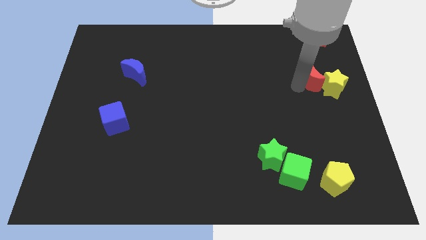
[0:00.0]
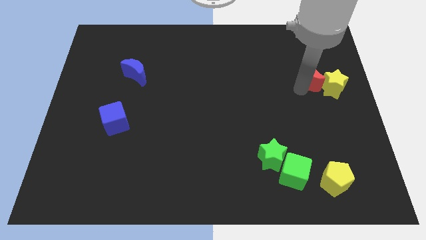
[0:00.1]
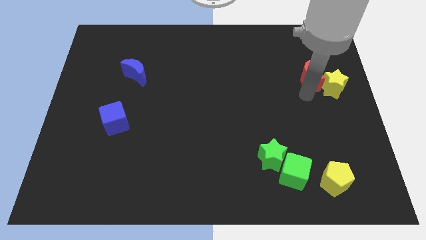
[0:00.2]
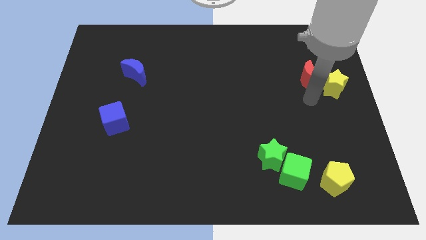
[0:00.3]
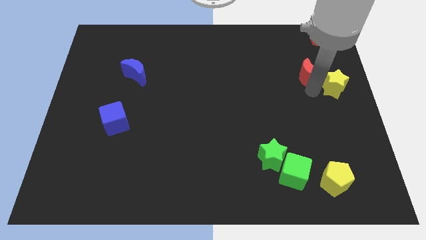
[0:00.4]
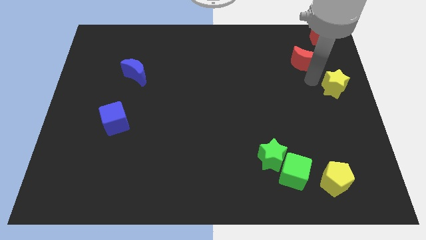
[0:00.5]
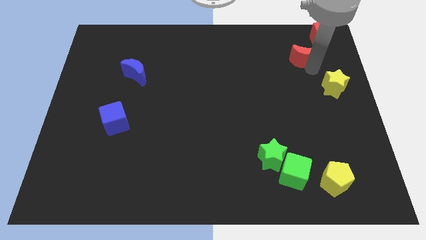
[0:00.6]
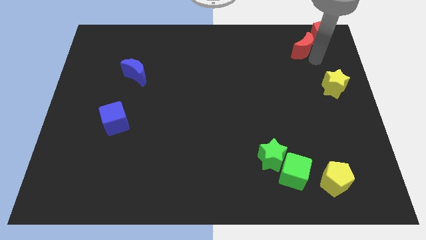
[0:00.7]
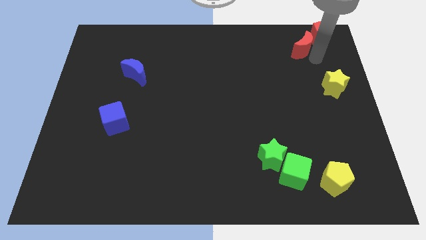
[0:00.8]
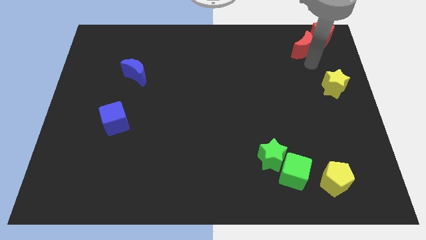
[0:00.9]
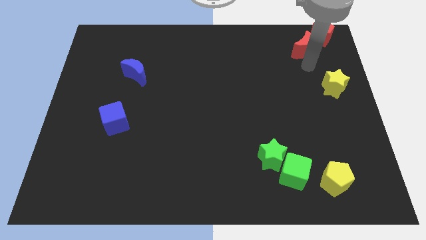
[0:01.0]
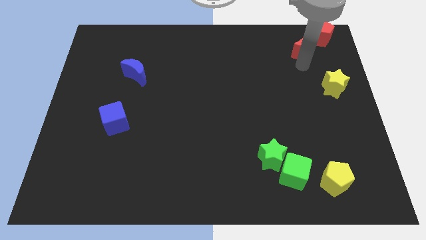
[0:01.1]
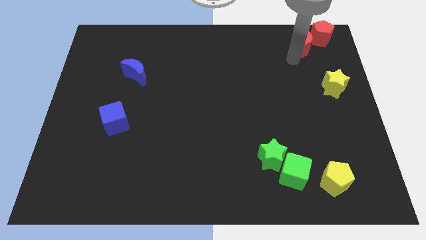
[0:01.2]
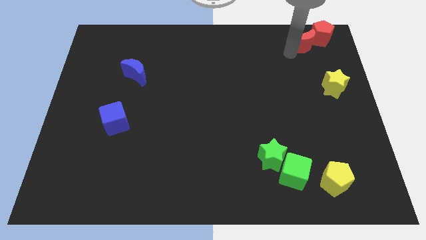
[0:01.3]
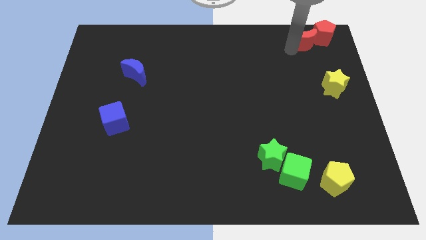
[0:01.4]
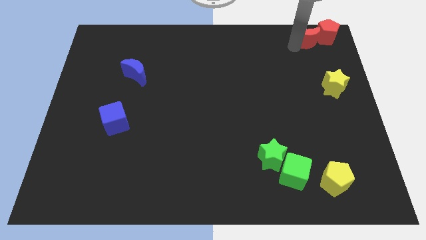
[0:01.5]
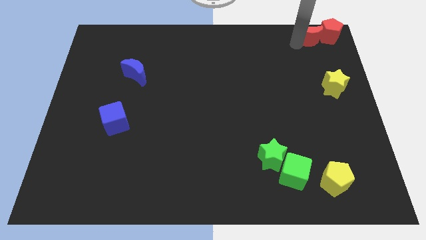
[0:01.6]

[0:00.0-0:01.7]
move red moon to the left of red pentagon

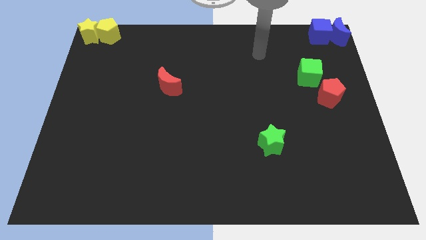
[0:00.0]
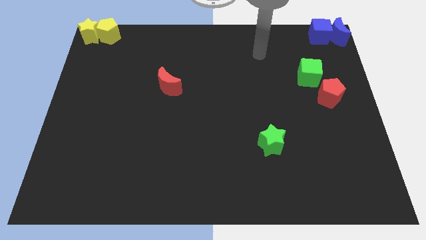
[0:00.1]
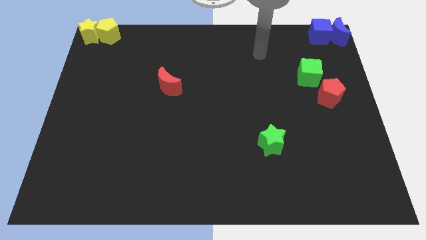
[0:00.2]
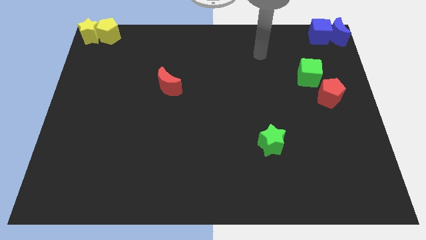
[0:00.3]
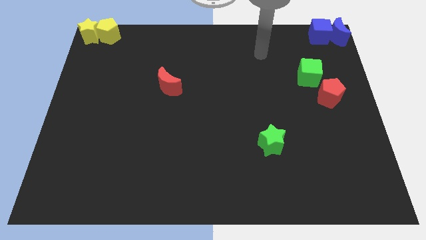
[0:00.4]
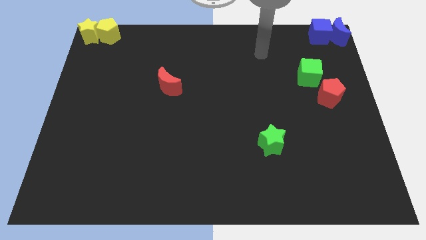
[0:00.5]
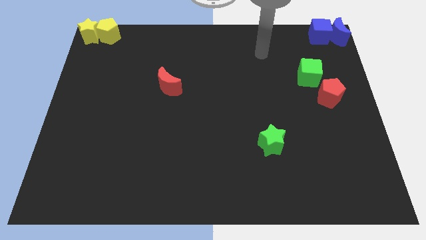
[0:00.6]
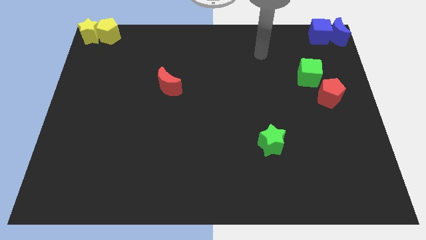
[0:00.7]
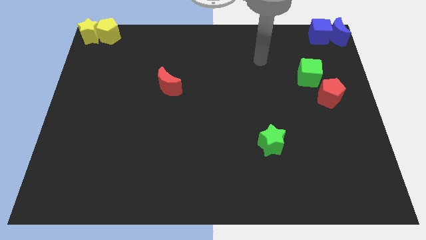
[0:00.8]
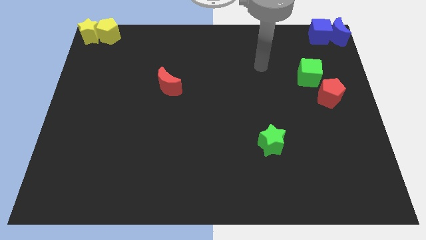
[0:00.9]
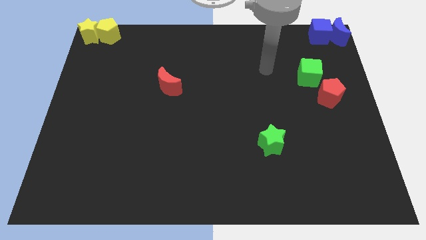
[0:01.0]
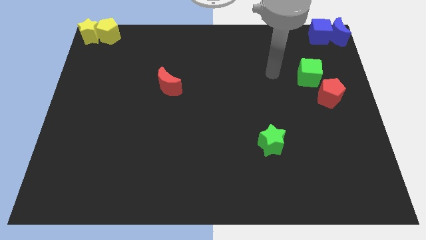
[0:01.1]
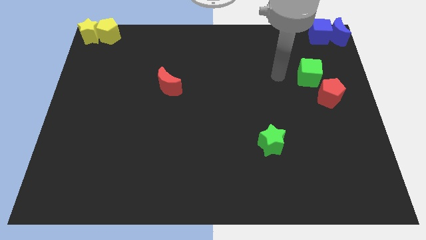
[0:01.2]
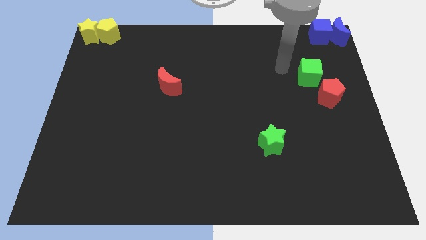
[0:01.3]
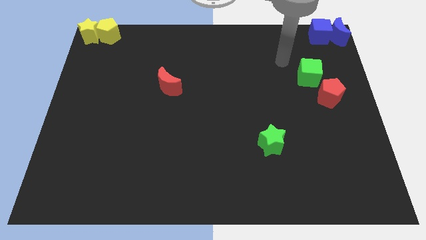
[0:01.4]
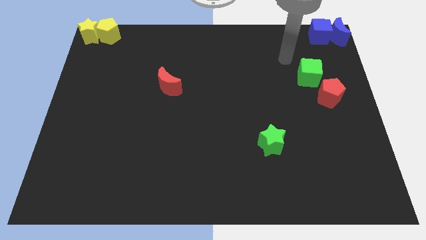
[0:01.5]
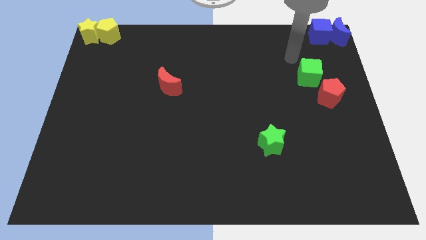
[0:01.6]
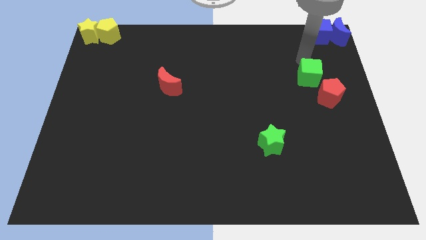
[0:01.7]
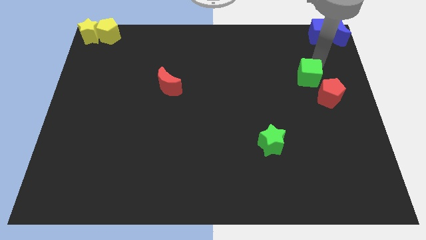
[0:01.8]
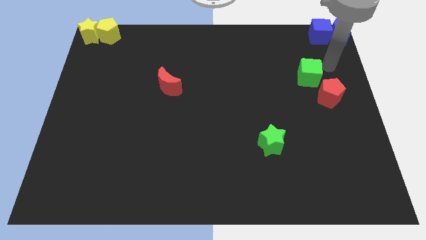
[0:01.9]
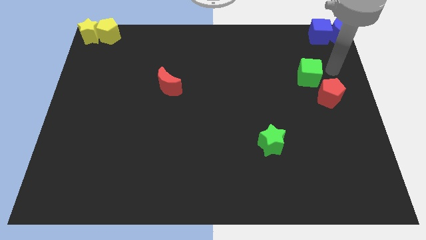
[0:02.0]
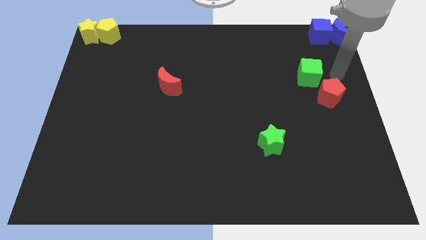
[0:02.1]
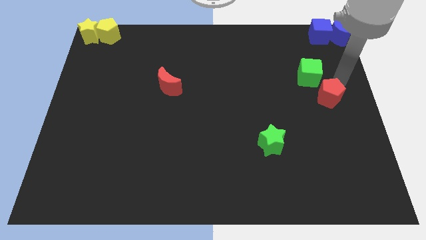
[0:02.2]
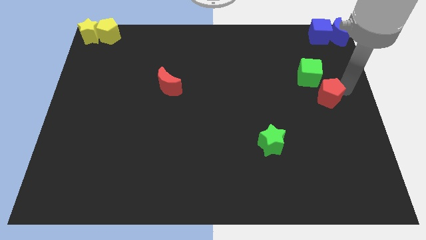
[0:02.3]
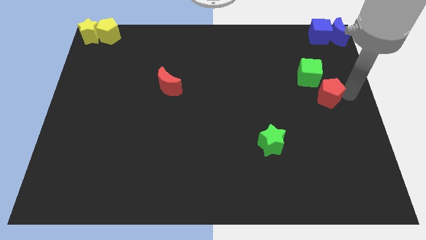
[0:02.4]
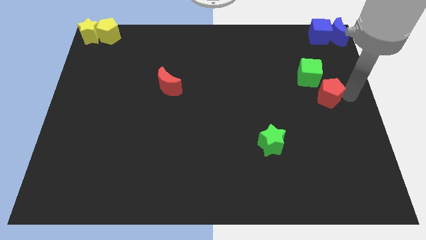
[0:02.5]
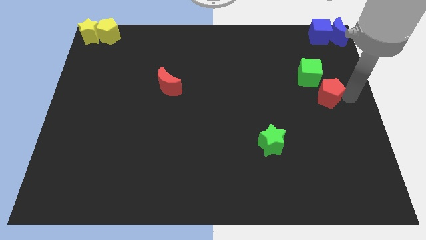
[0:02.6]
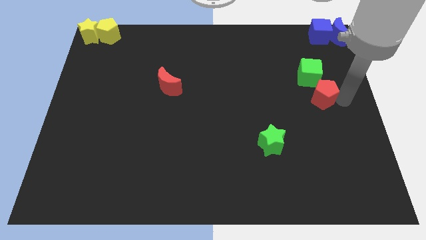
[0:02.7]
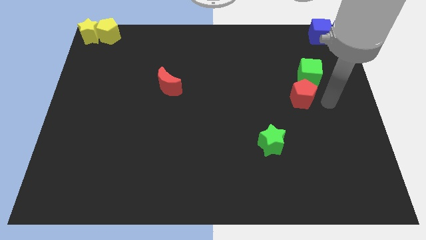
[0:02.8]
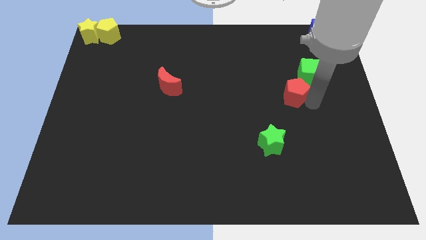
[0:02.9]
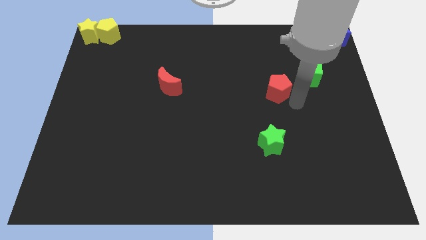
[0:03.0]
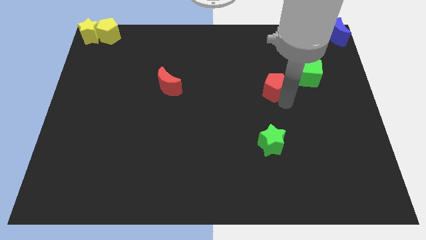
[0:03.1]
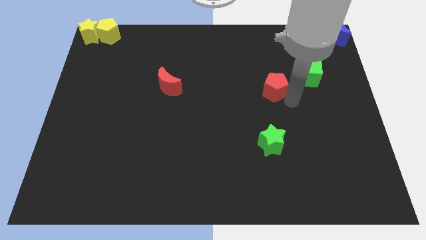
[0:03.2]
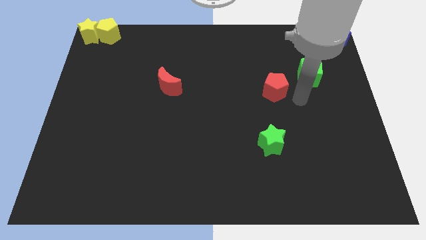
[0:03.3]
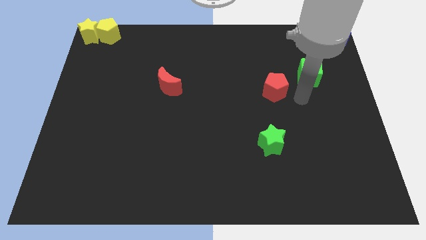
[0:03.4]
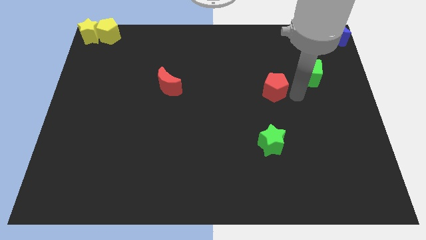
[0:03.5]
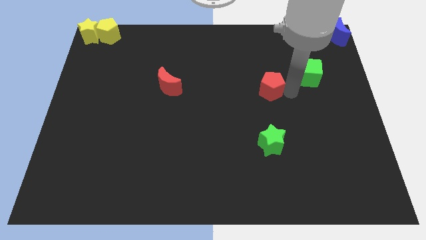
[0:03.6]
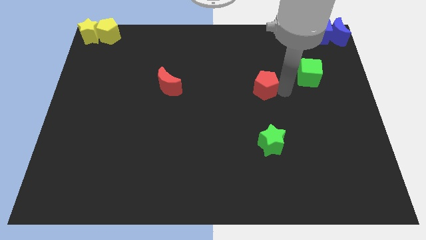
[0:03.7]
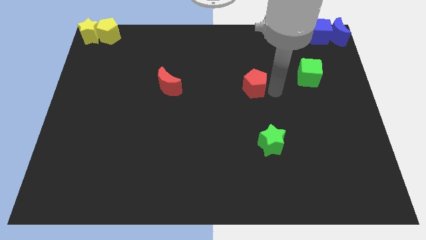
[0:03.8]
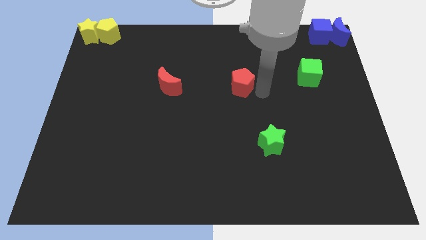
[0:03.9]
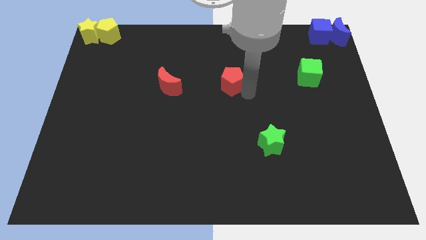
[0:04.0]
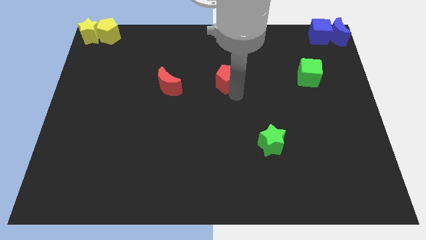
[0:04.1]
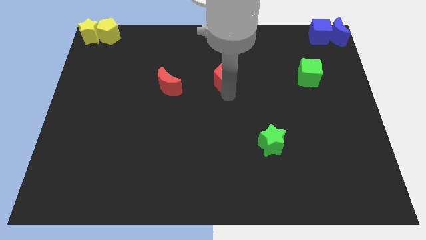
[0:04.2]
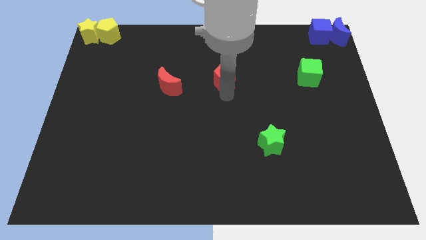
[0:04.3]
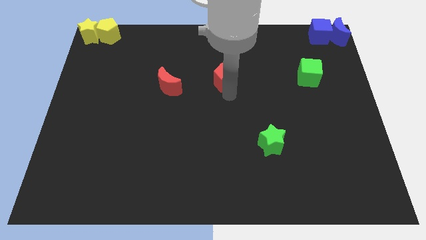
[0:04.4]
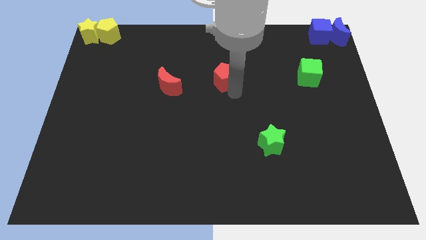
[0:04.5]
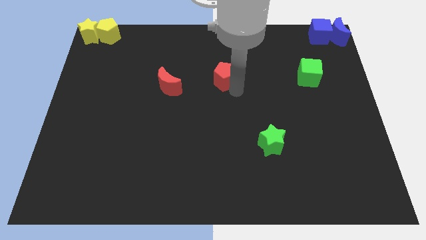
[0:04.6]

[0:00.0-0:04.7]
place the red pentagon parallel right to the red crescent

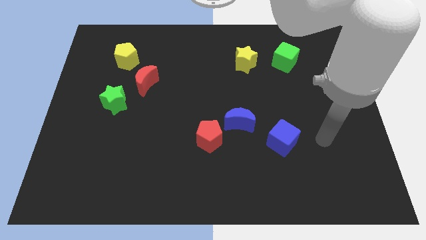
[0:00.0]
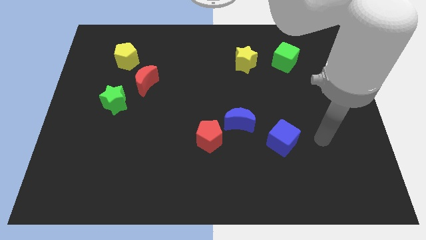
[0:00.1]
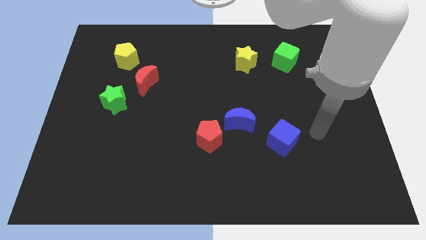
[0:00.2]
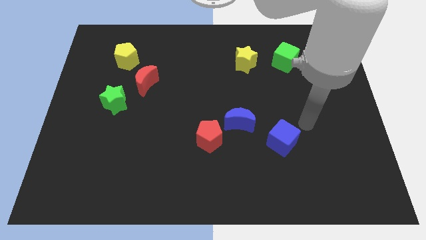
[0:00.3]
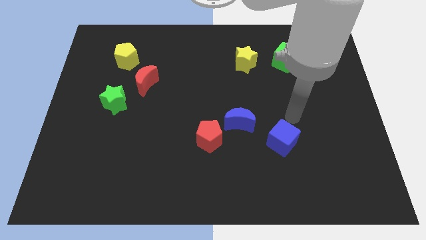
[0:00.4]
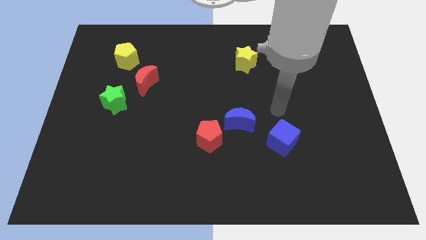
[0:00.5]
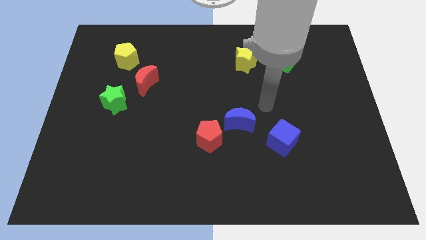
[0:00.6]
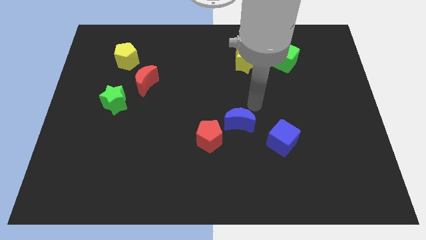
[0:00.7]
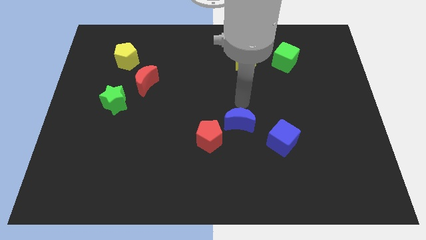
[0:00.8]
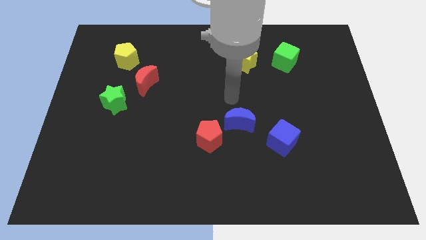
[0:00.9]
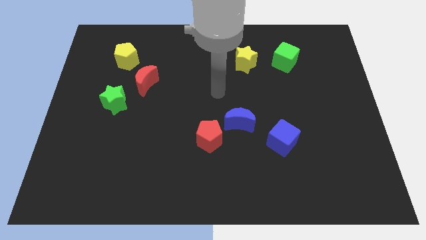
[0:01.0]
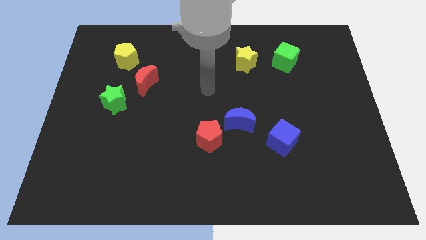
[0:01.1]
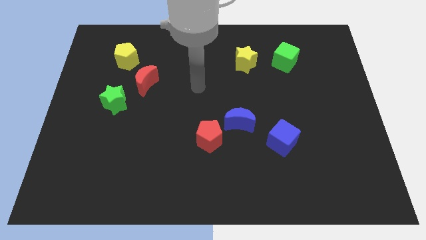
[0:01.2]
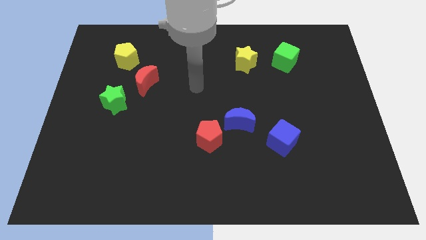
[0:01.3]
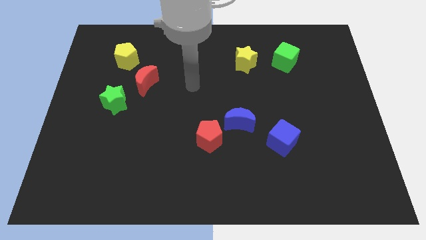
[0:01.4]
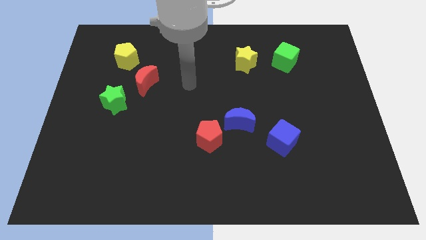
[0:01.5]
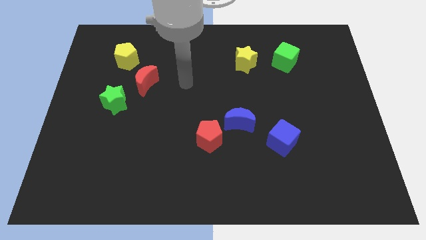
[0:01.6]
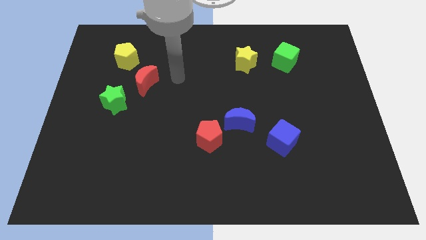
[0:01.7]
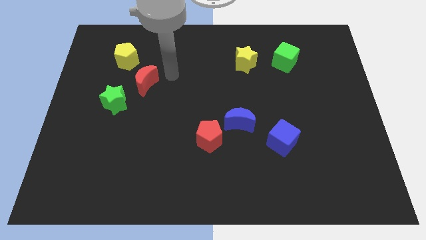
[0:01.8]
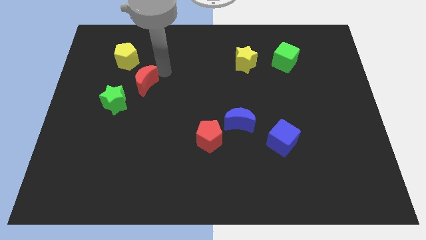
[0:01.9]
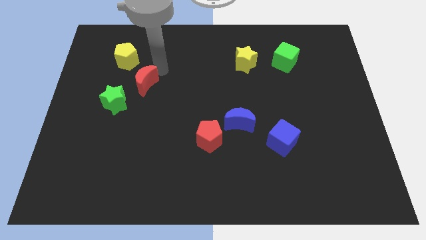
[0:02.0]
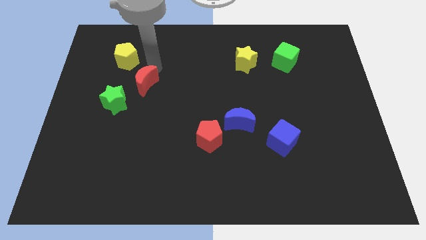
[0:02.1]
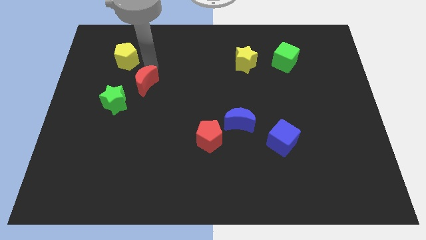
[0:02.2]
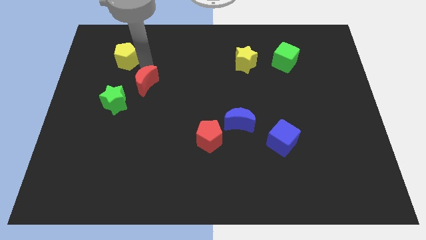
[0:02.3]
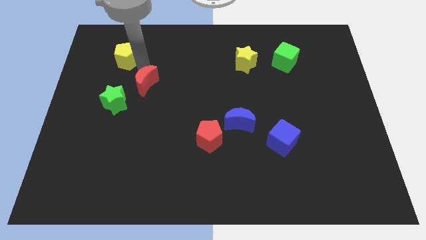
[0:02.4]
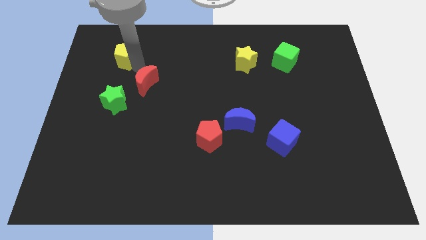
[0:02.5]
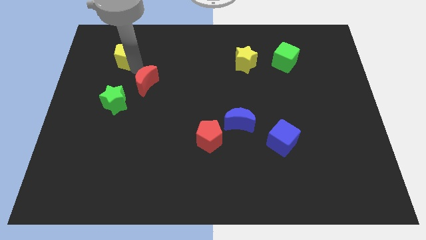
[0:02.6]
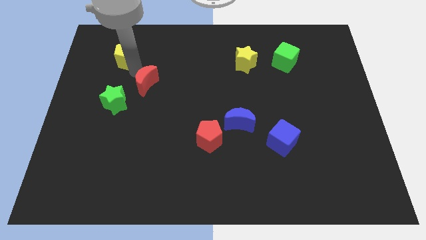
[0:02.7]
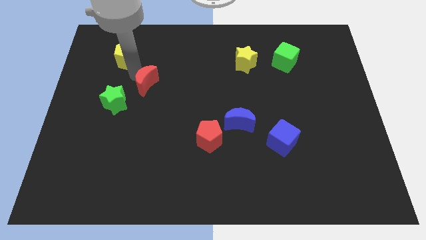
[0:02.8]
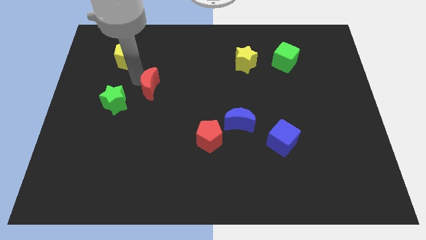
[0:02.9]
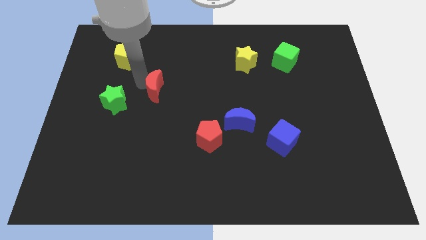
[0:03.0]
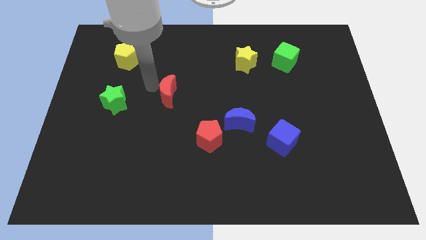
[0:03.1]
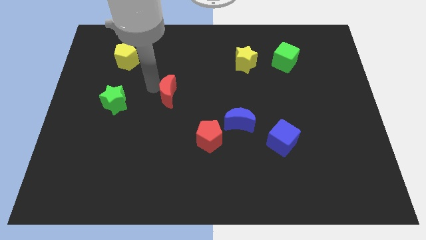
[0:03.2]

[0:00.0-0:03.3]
place the red crescent diagonally to red pentagon
